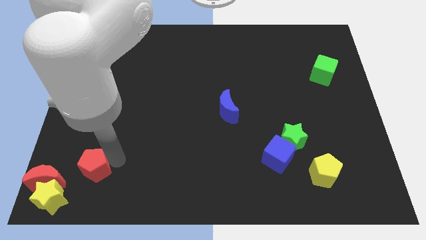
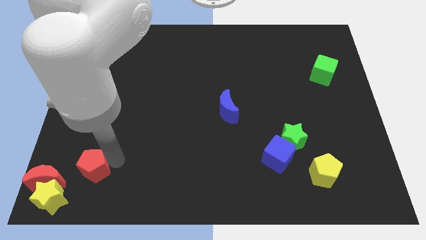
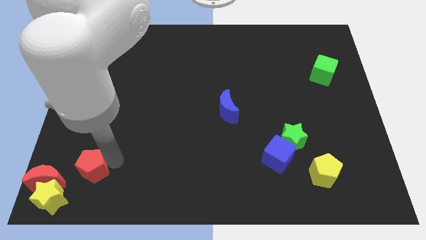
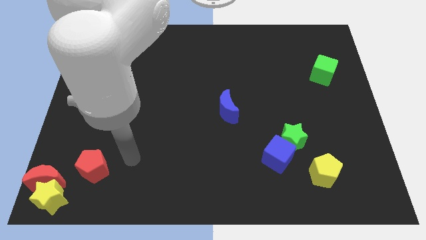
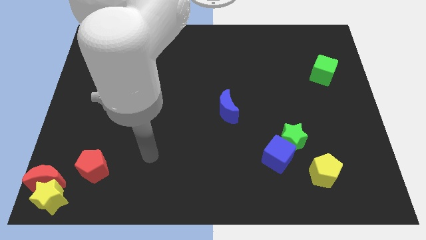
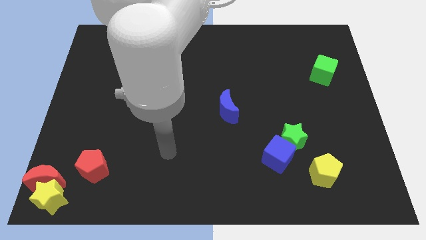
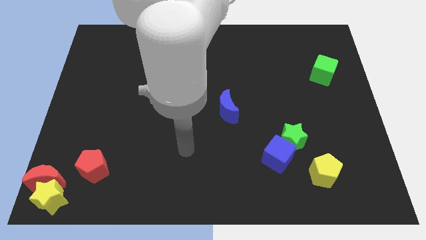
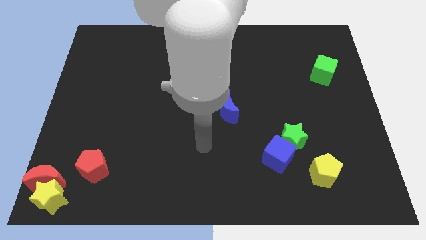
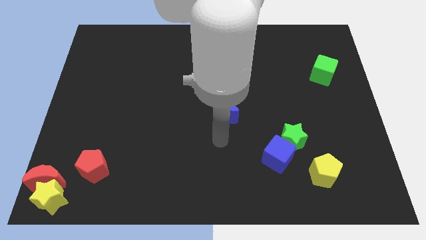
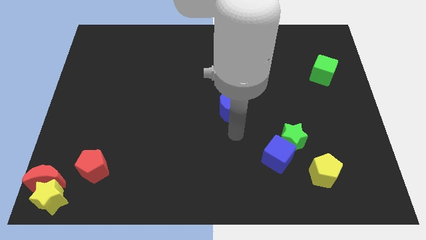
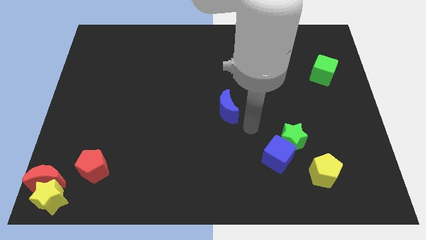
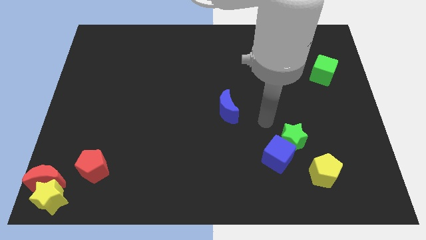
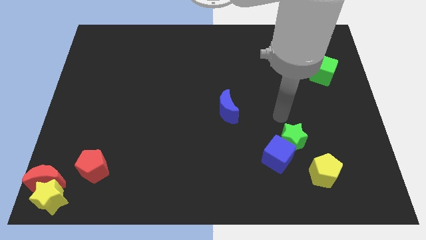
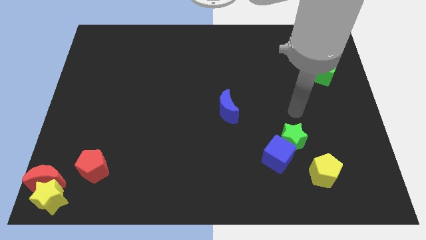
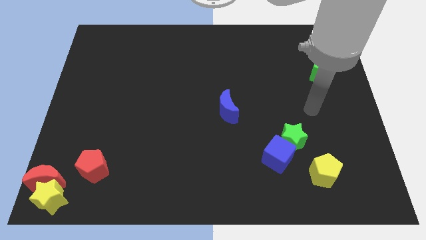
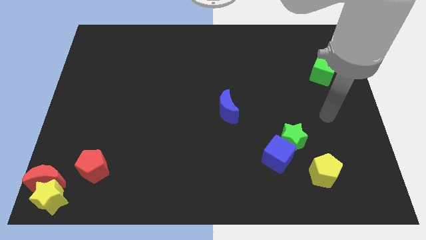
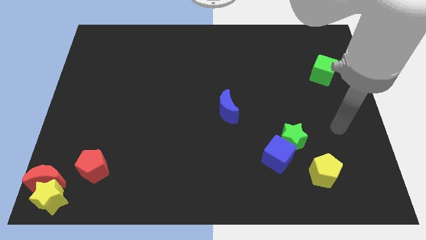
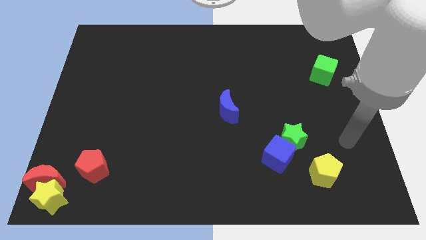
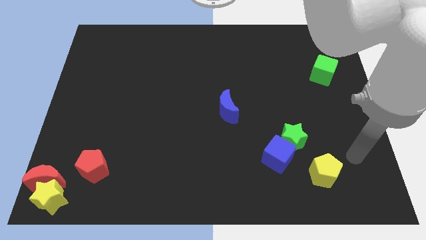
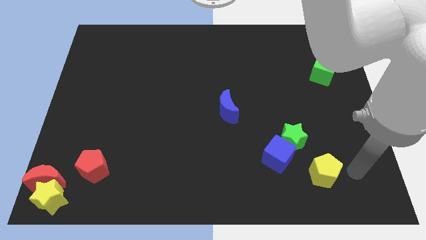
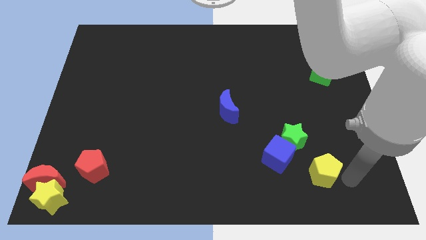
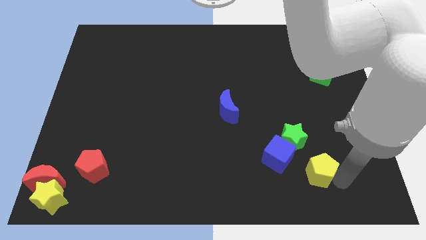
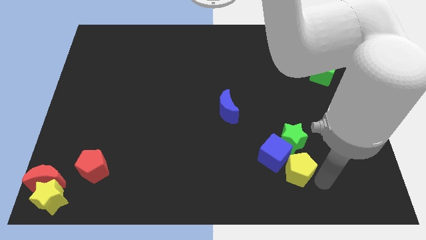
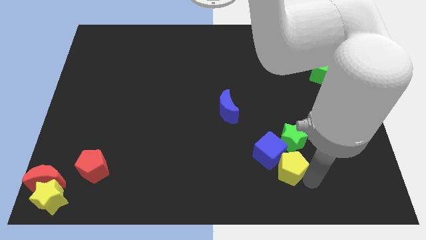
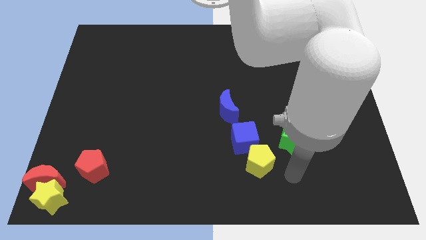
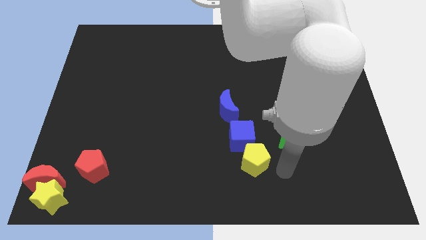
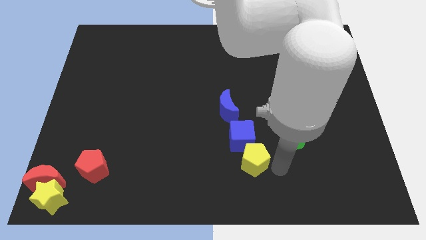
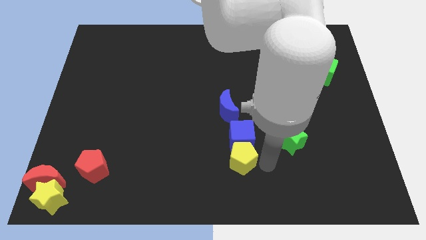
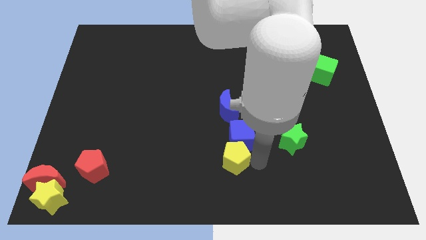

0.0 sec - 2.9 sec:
place the yellow pentagon down to the blue cube

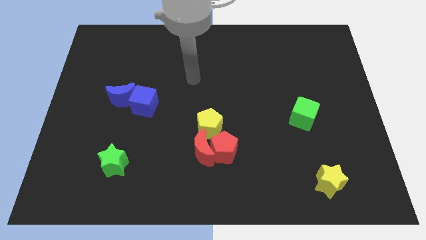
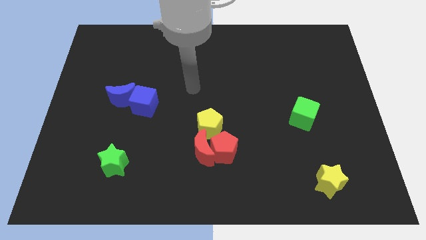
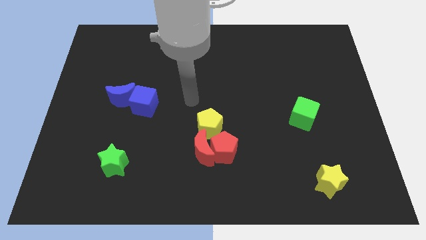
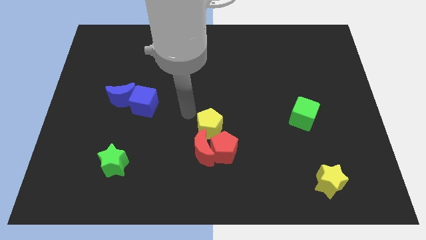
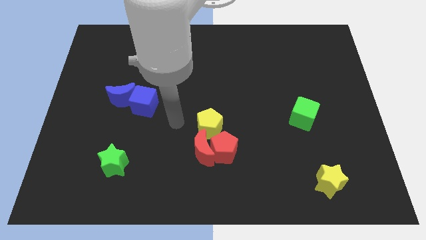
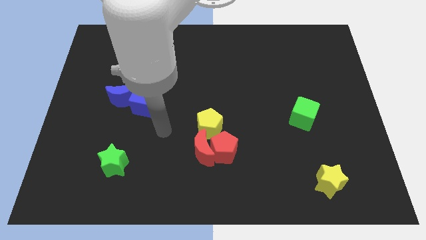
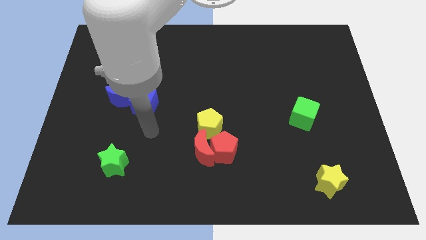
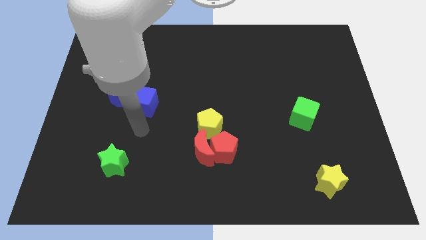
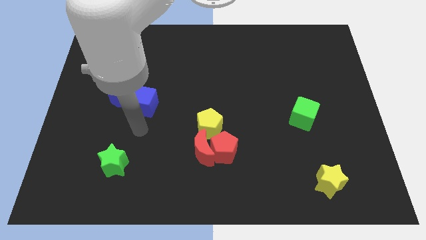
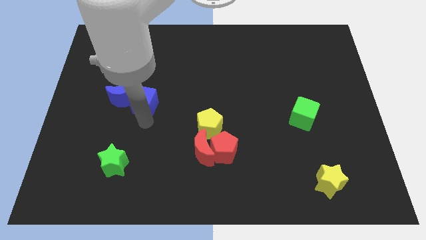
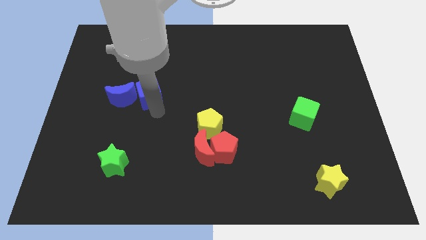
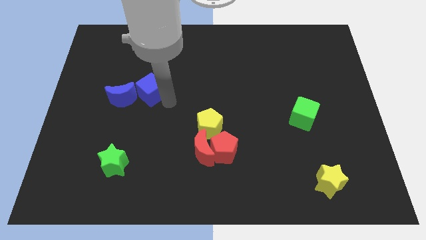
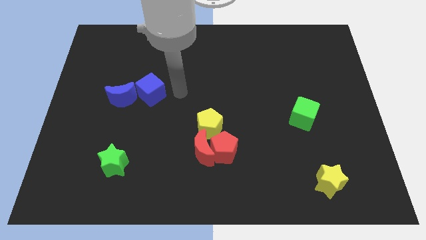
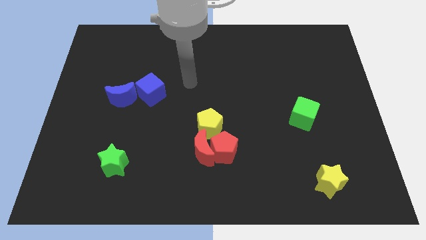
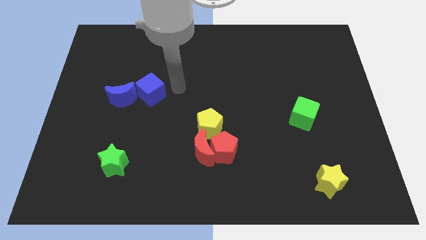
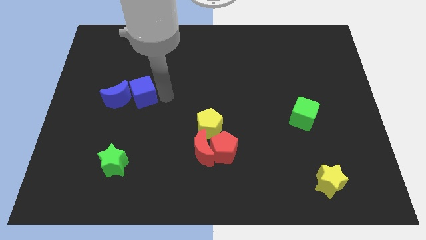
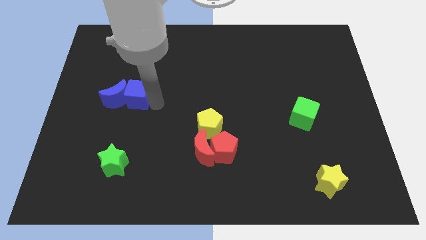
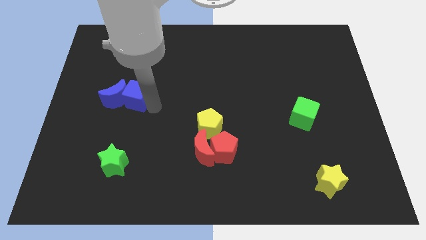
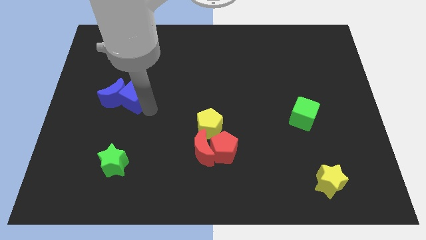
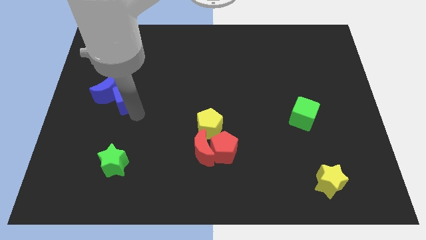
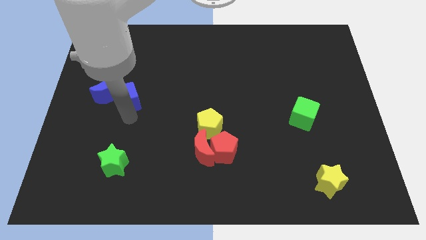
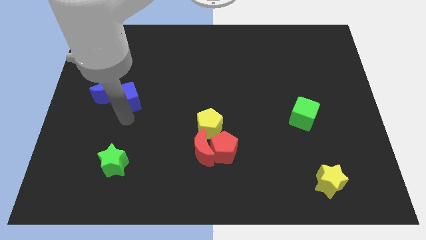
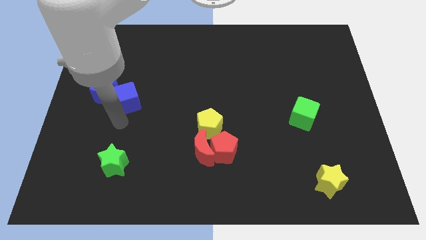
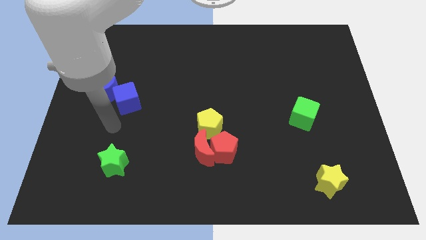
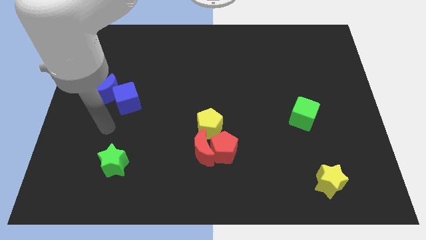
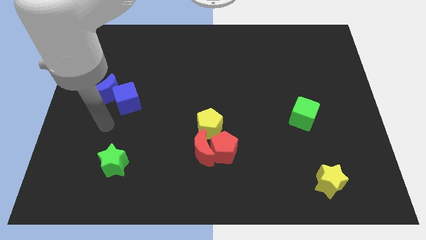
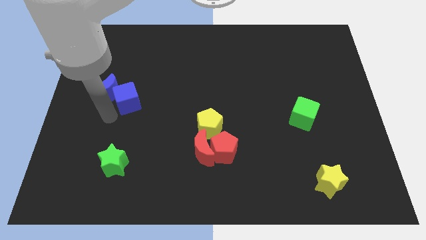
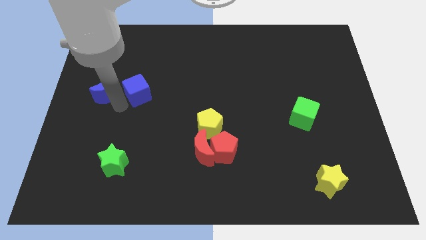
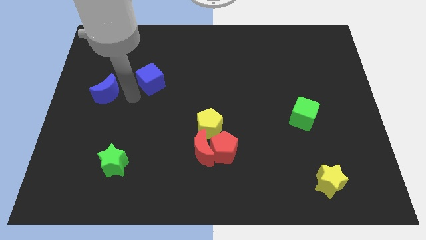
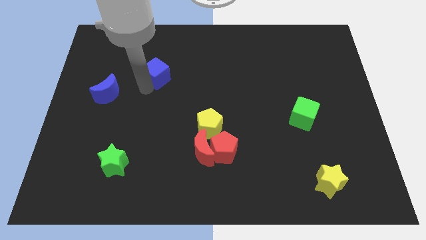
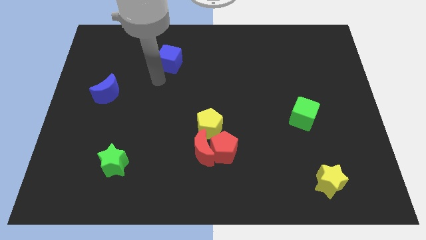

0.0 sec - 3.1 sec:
separate blue cube from blue crescent

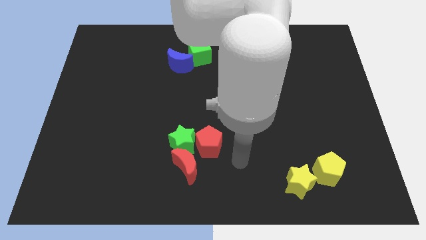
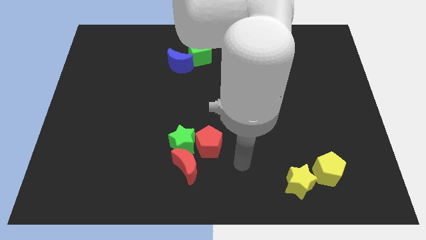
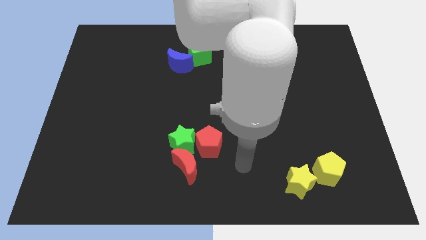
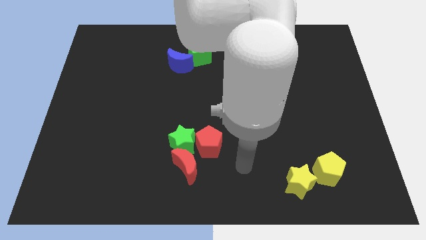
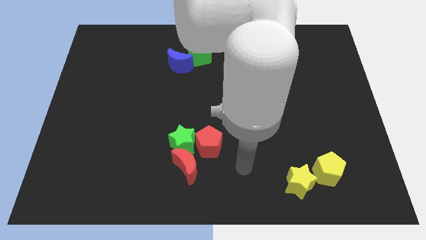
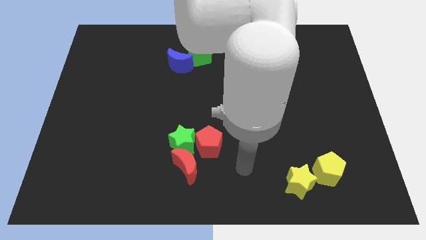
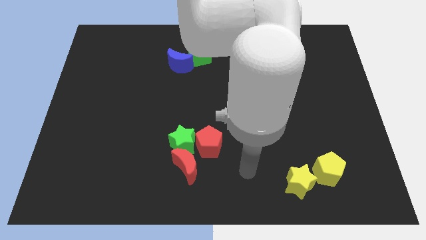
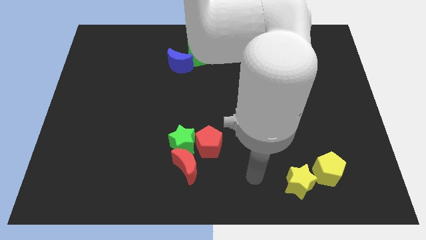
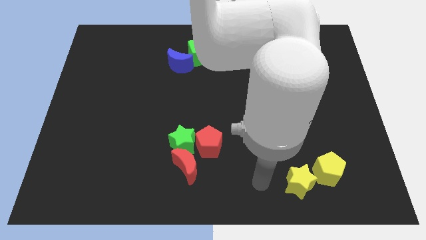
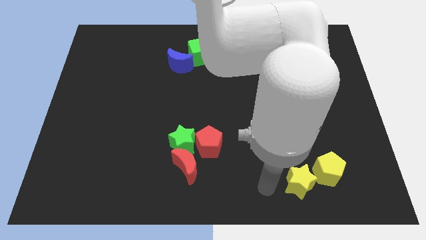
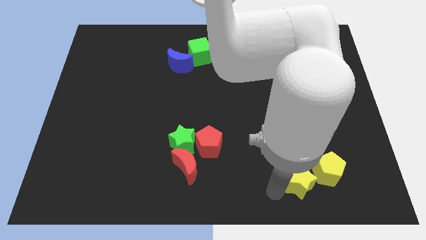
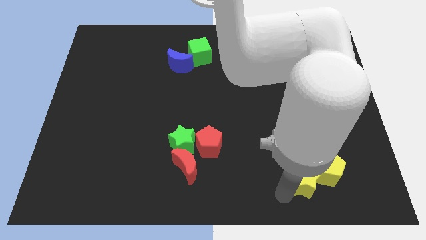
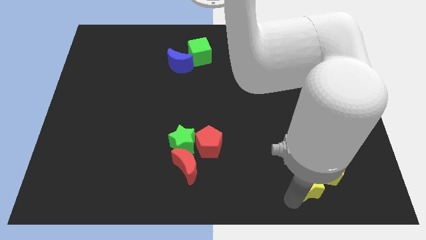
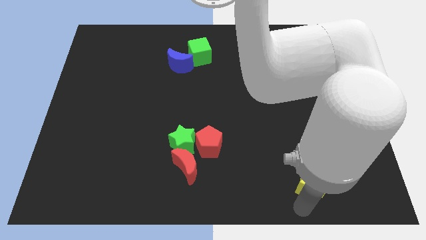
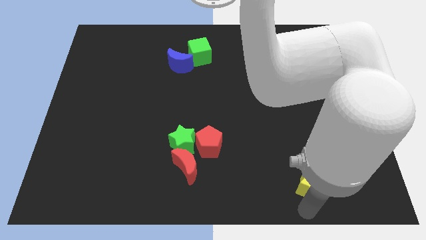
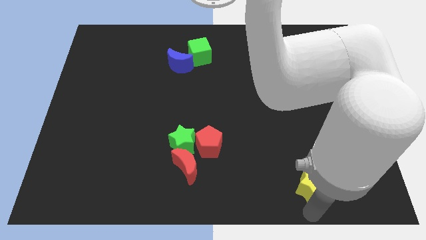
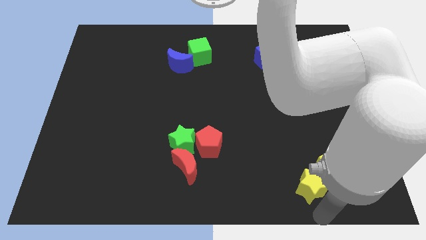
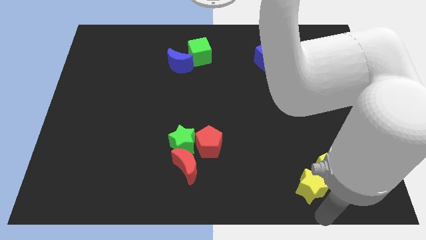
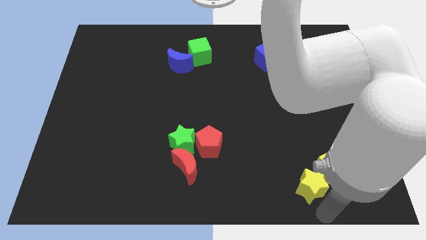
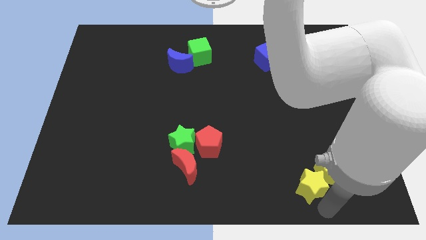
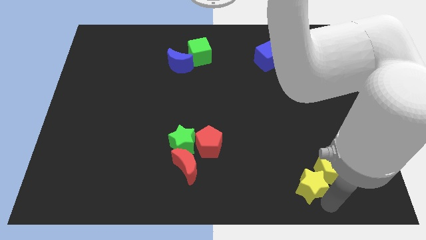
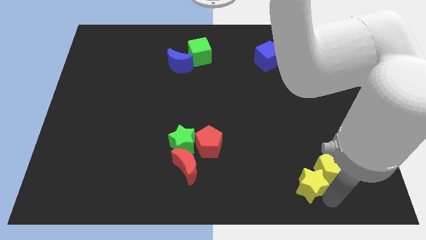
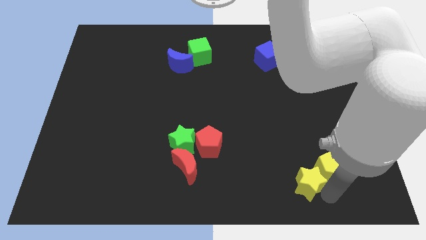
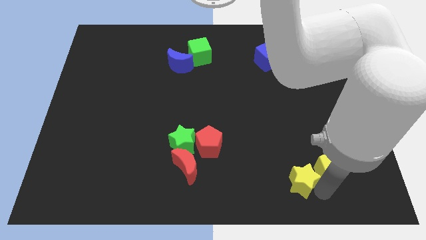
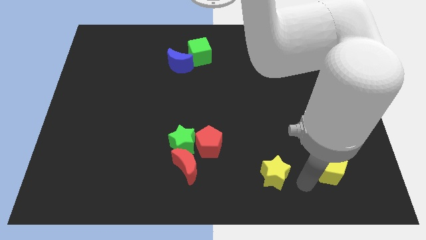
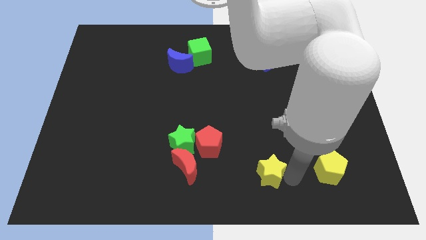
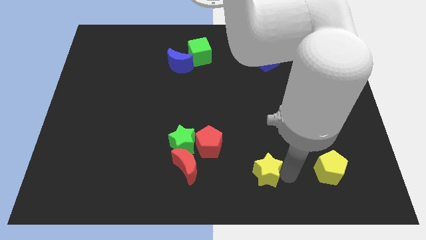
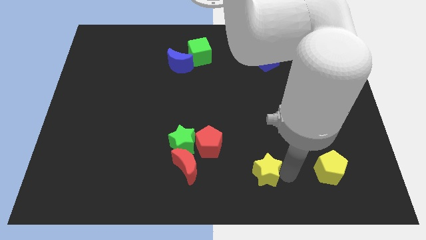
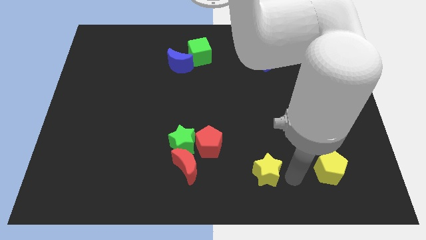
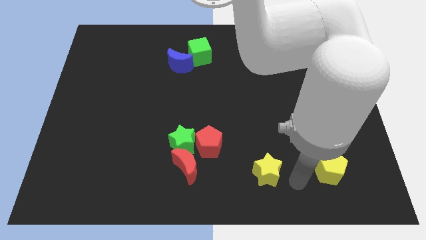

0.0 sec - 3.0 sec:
place the yellow star between red moon and yellow pentagon
